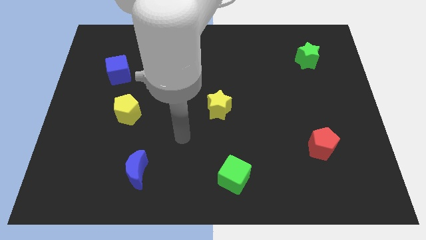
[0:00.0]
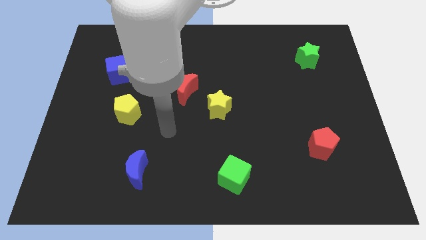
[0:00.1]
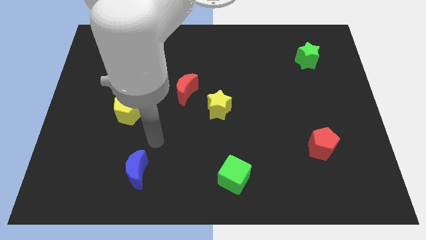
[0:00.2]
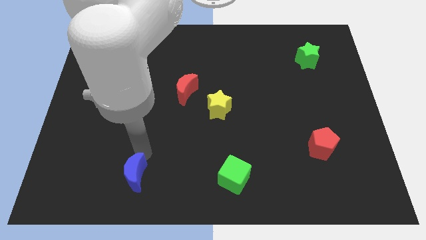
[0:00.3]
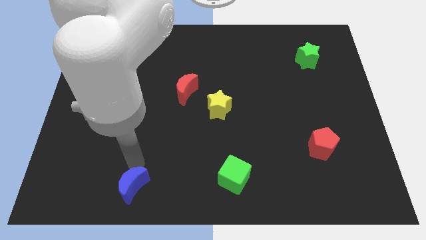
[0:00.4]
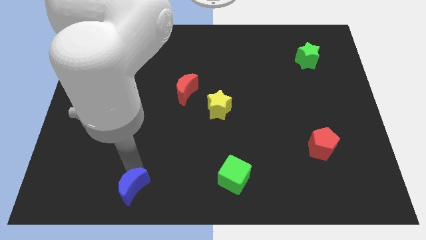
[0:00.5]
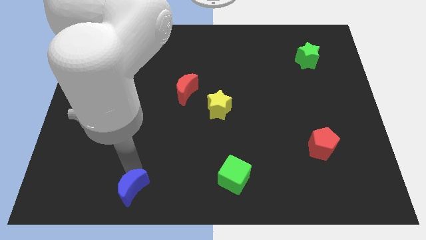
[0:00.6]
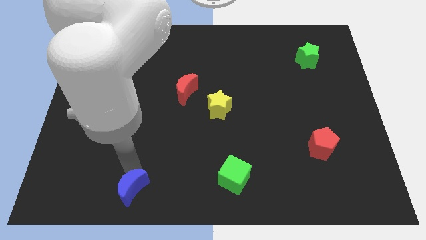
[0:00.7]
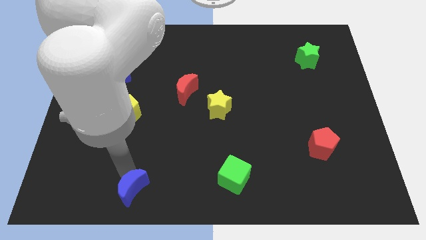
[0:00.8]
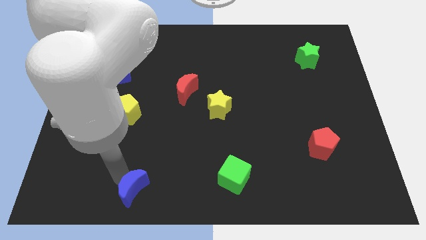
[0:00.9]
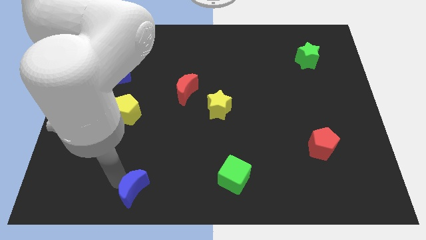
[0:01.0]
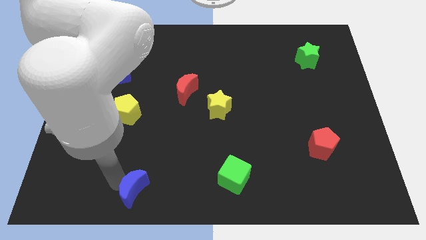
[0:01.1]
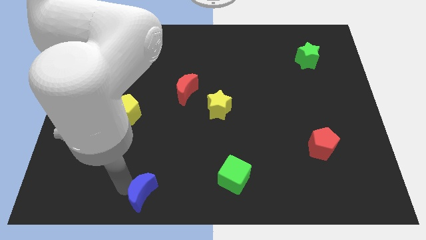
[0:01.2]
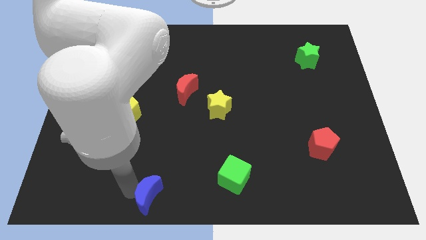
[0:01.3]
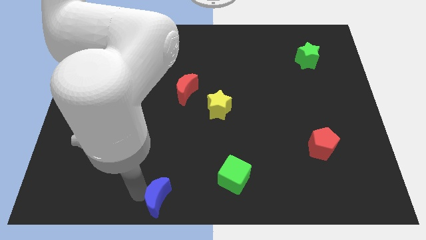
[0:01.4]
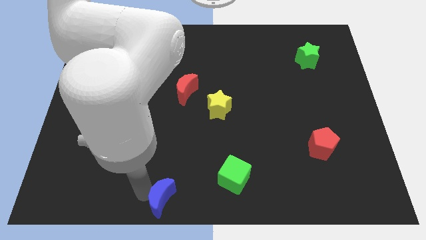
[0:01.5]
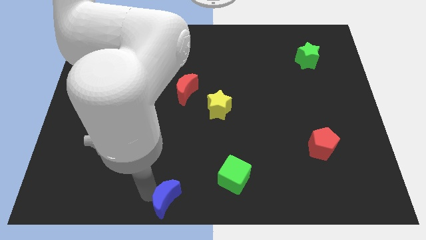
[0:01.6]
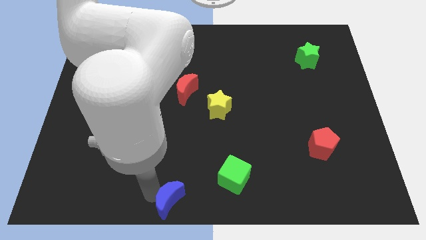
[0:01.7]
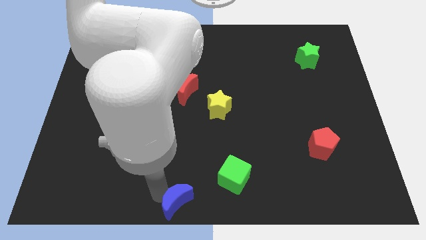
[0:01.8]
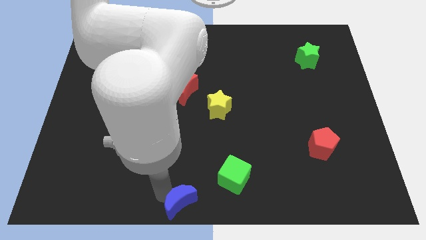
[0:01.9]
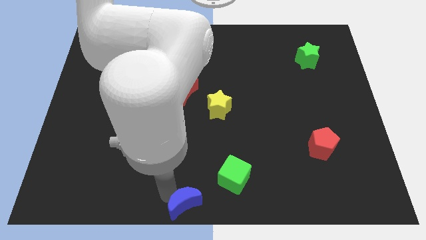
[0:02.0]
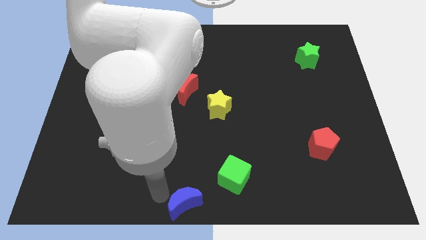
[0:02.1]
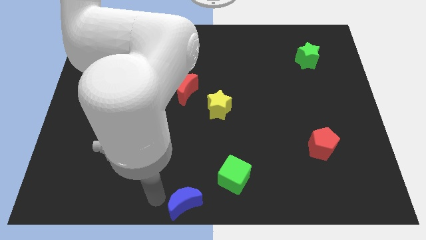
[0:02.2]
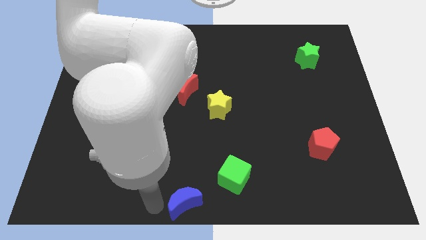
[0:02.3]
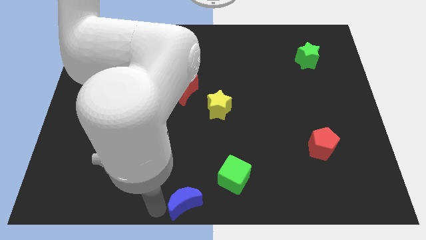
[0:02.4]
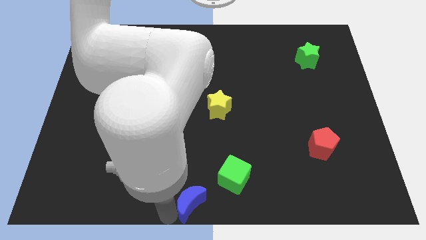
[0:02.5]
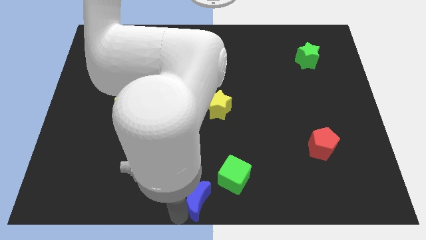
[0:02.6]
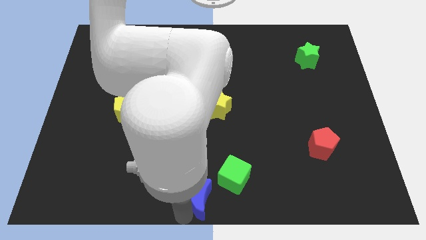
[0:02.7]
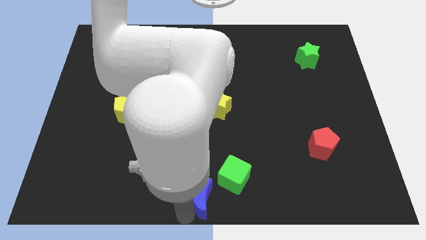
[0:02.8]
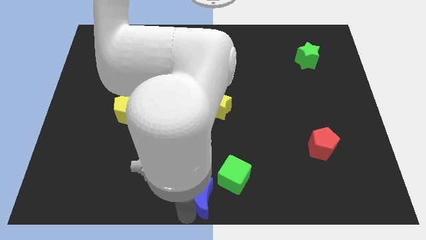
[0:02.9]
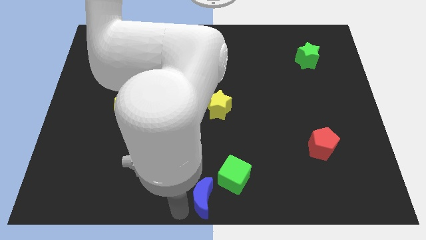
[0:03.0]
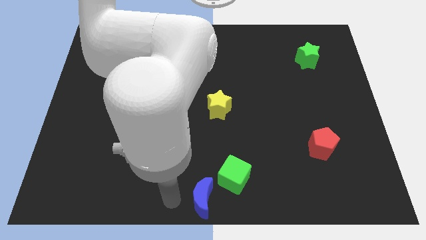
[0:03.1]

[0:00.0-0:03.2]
place the blue moon at the bottom center of the board

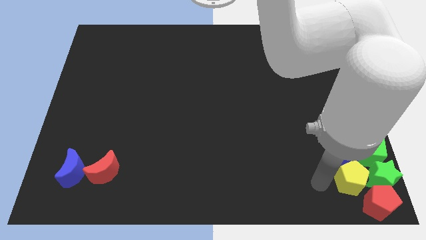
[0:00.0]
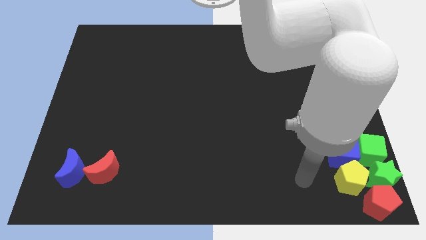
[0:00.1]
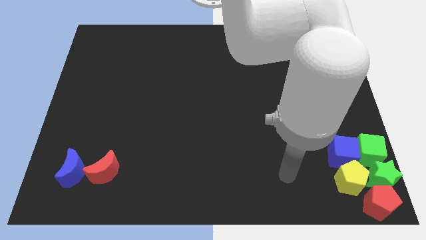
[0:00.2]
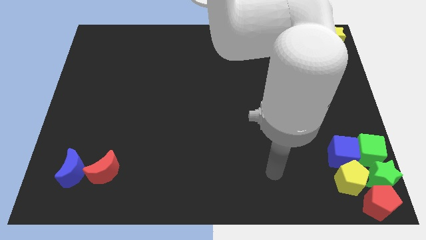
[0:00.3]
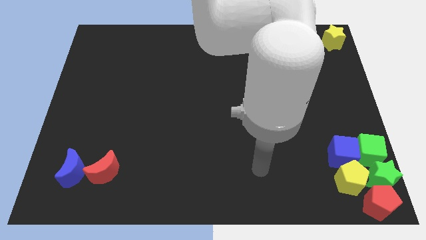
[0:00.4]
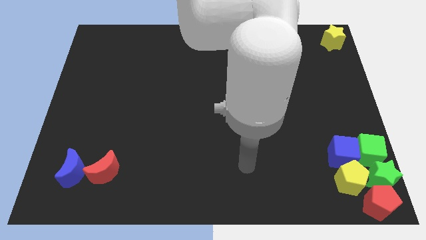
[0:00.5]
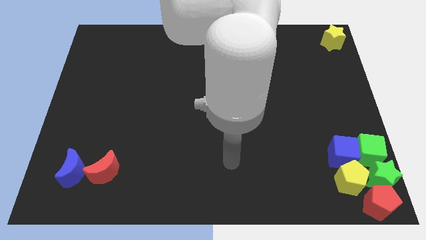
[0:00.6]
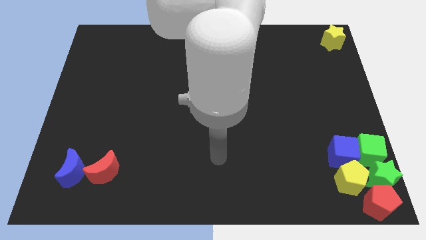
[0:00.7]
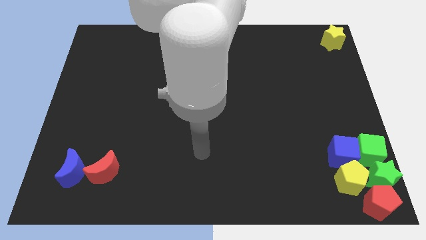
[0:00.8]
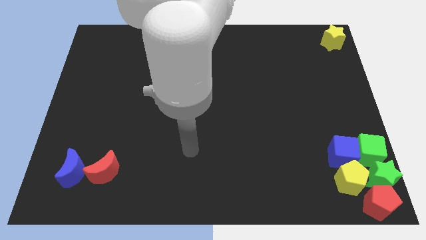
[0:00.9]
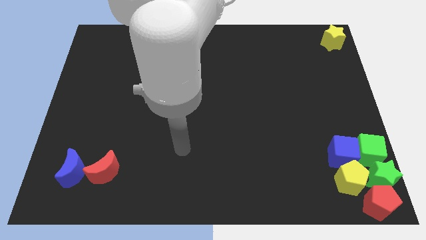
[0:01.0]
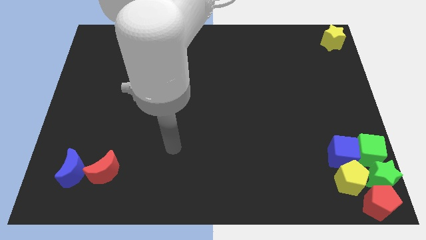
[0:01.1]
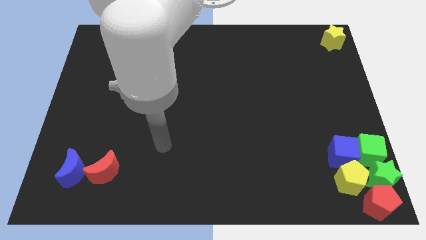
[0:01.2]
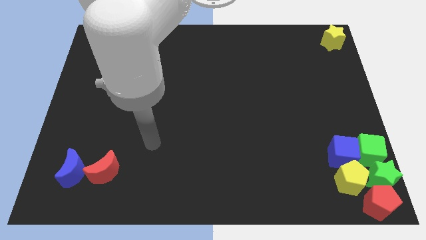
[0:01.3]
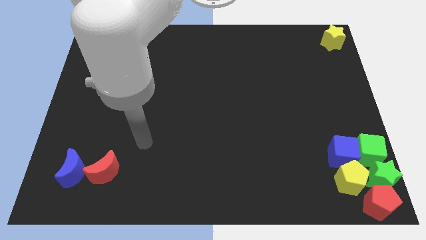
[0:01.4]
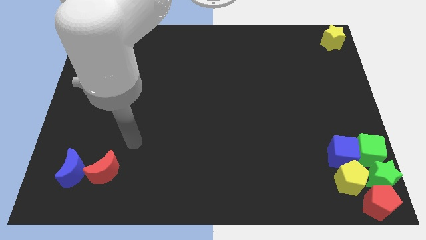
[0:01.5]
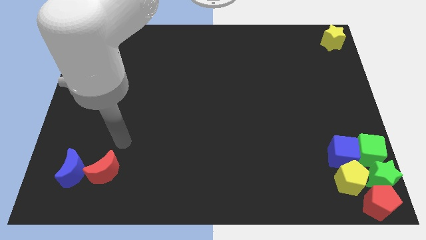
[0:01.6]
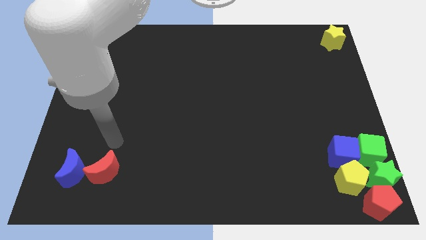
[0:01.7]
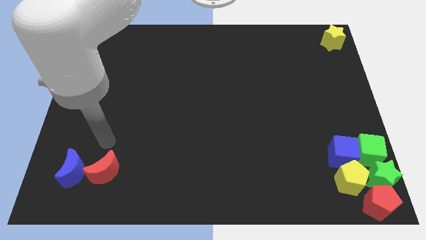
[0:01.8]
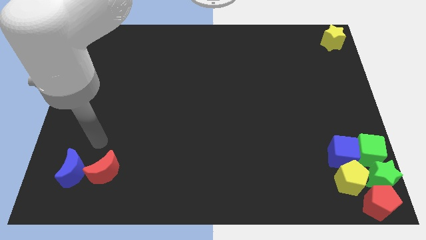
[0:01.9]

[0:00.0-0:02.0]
slide your hand away from the yellow pentagon

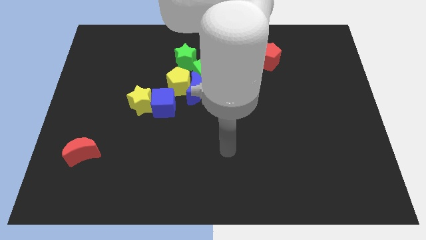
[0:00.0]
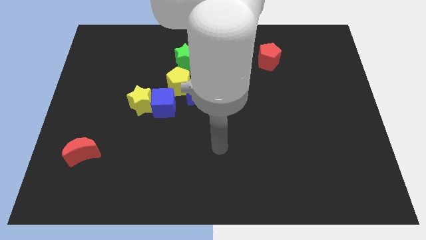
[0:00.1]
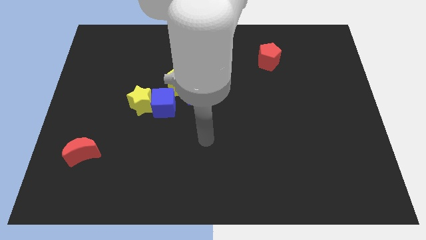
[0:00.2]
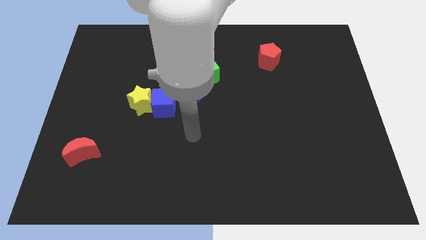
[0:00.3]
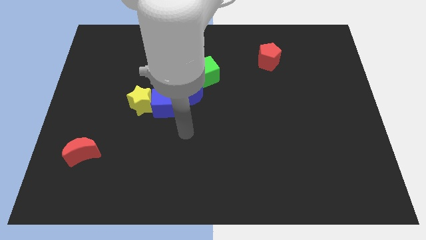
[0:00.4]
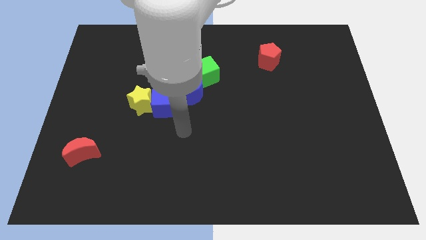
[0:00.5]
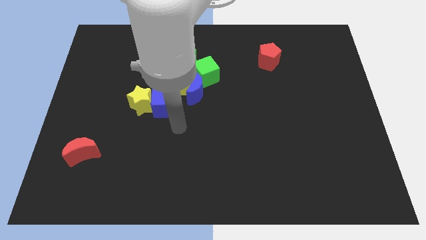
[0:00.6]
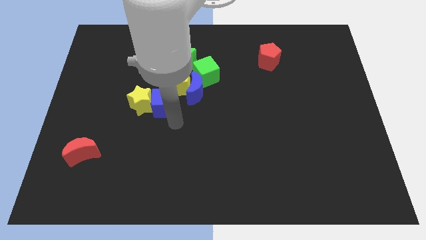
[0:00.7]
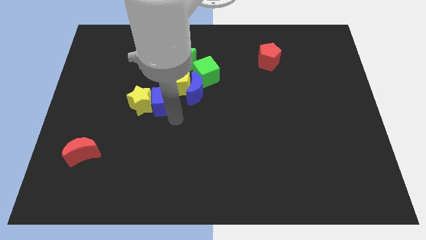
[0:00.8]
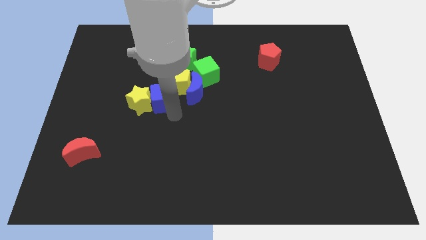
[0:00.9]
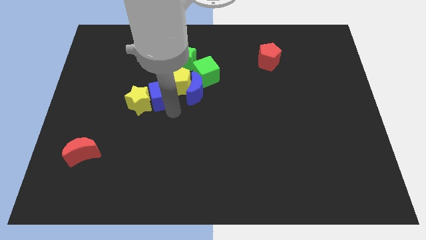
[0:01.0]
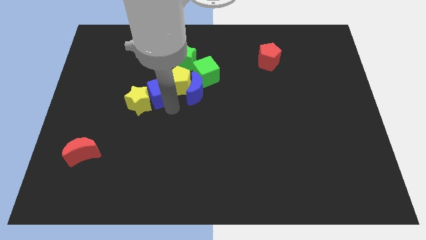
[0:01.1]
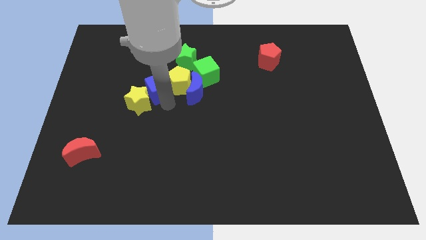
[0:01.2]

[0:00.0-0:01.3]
move the blue cube in between the yellow blocks

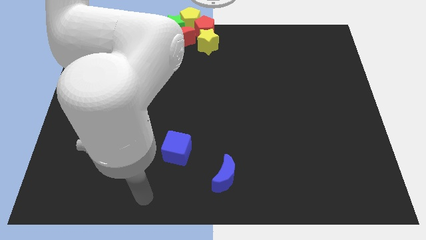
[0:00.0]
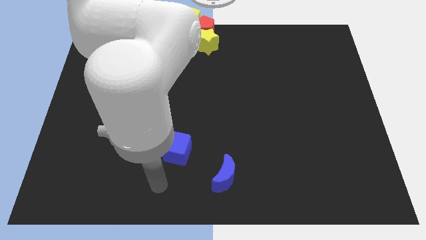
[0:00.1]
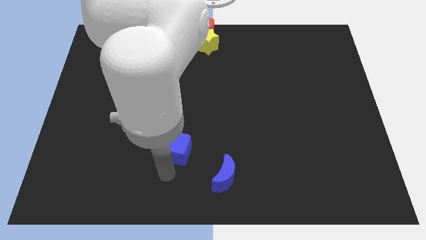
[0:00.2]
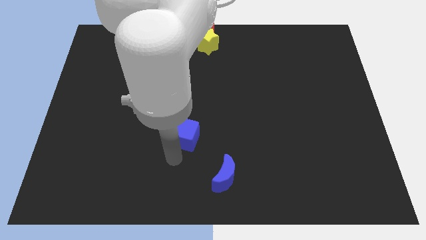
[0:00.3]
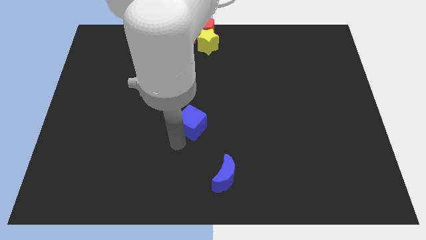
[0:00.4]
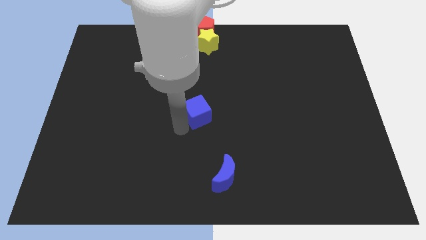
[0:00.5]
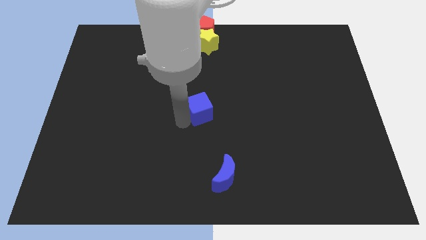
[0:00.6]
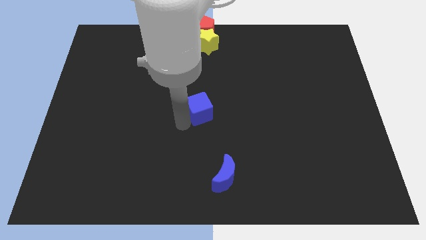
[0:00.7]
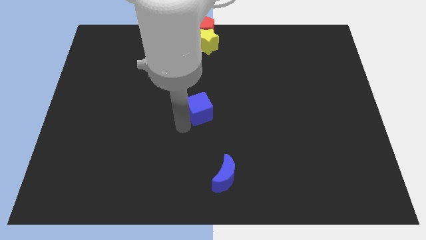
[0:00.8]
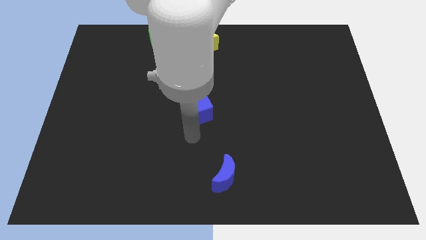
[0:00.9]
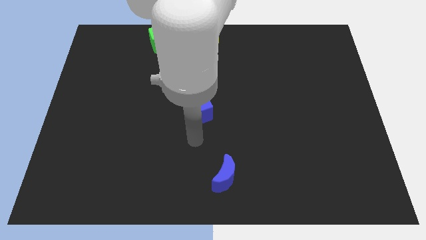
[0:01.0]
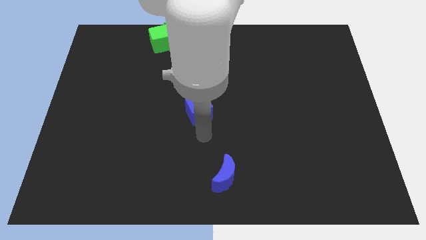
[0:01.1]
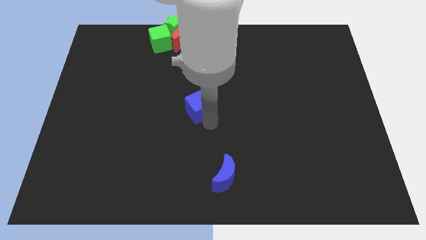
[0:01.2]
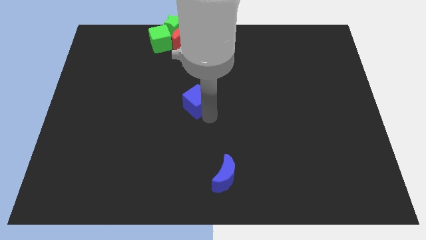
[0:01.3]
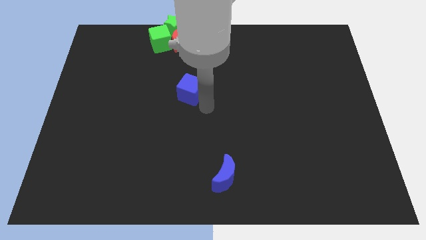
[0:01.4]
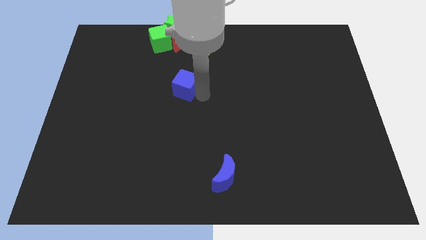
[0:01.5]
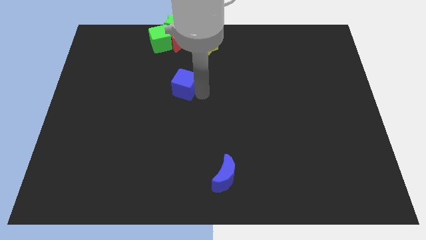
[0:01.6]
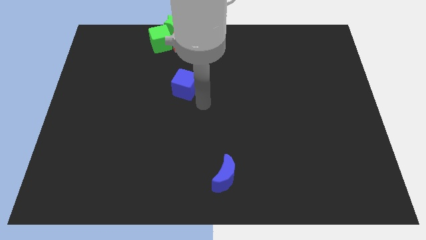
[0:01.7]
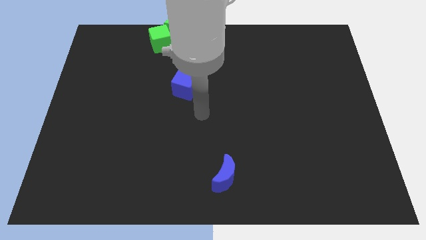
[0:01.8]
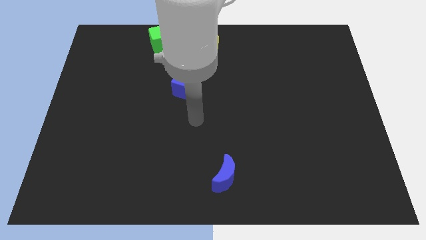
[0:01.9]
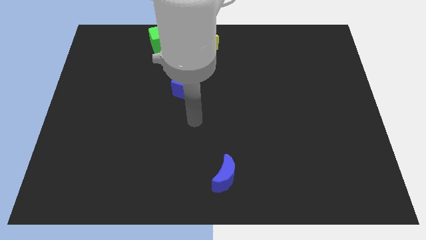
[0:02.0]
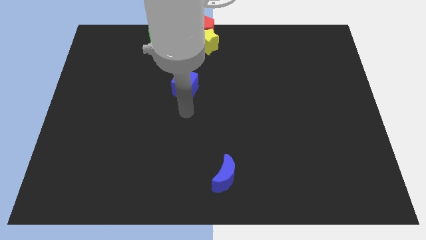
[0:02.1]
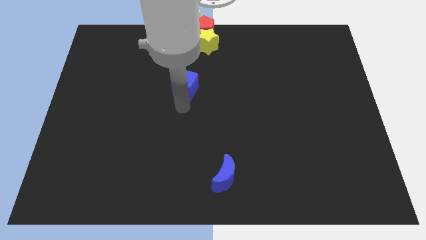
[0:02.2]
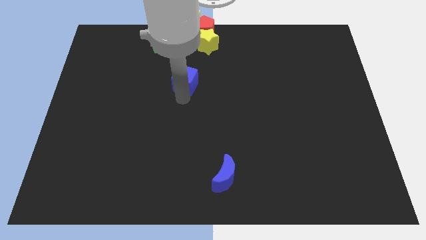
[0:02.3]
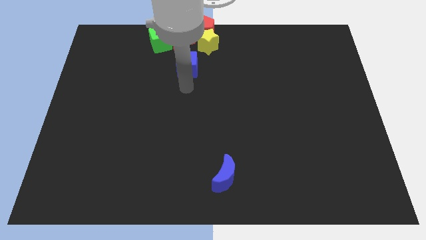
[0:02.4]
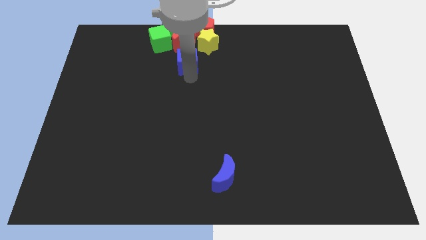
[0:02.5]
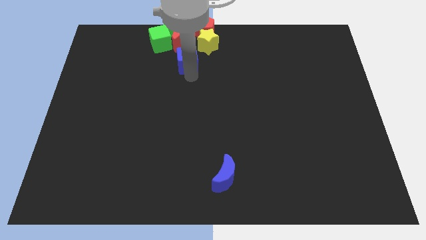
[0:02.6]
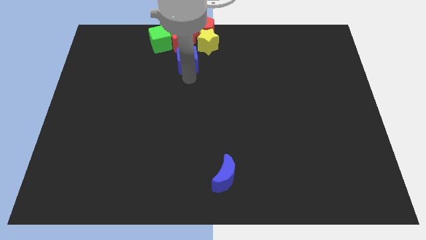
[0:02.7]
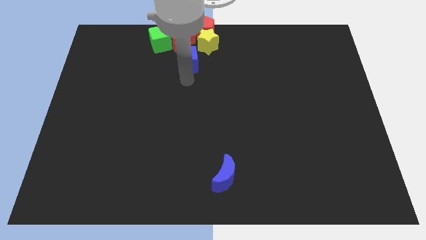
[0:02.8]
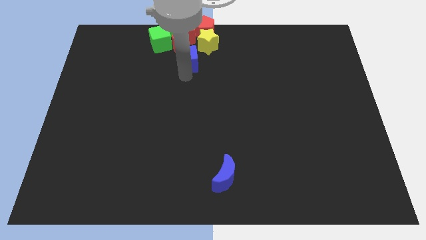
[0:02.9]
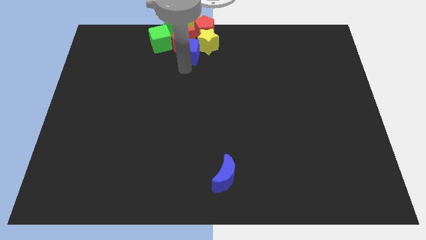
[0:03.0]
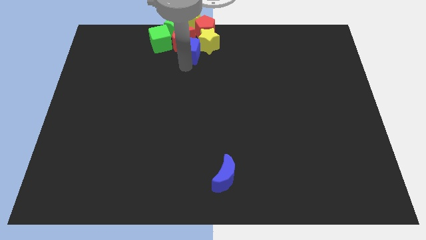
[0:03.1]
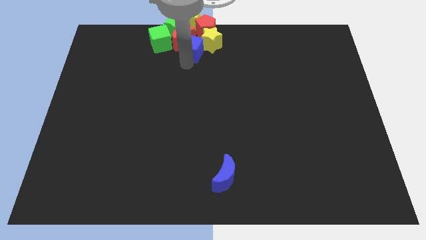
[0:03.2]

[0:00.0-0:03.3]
push the blue cube into the group of blocks
